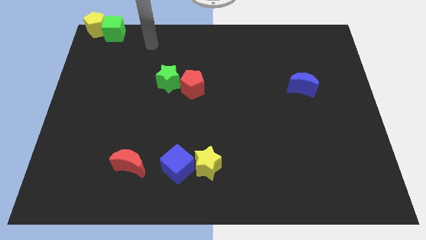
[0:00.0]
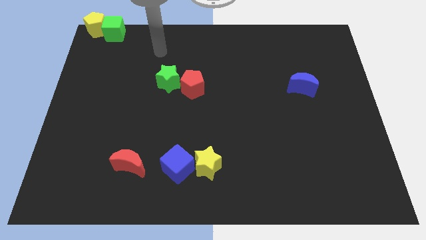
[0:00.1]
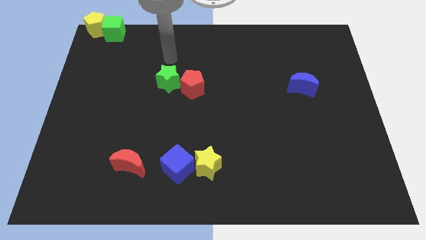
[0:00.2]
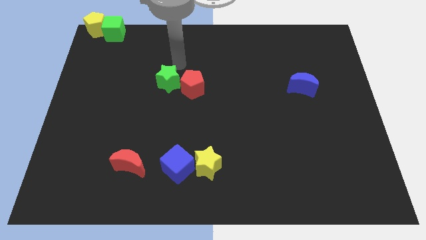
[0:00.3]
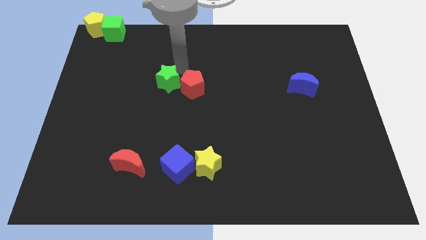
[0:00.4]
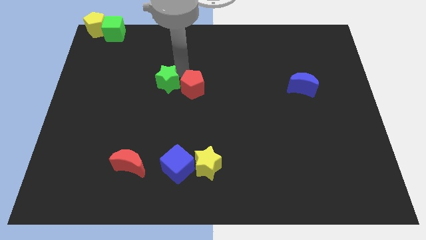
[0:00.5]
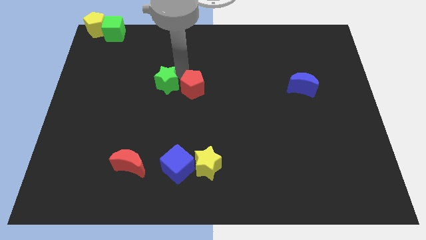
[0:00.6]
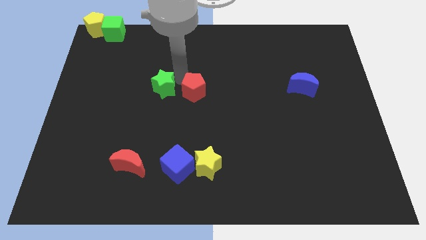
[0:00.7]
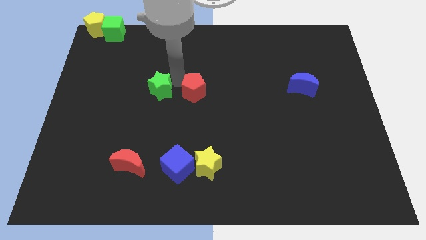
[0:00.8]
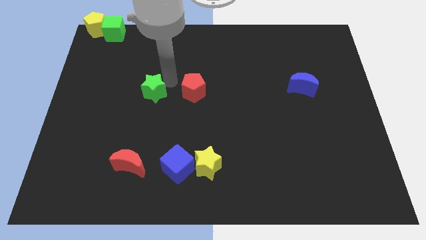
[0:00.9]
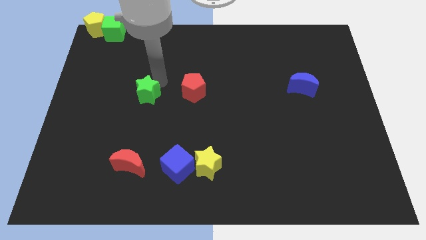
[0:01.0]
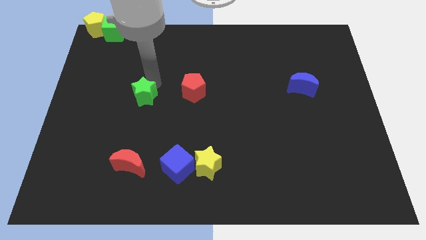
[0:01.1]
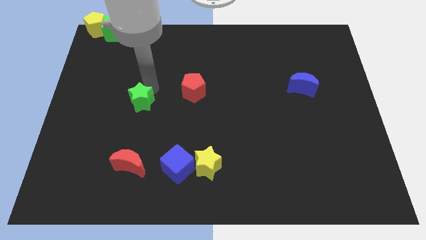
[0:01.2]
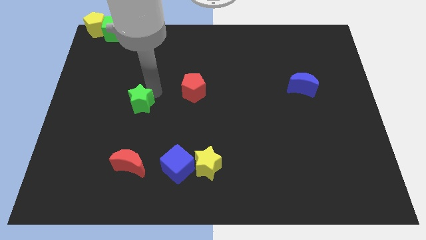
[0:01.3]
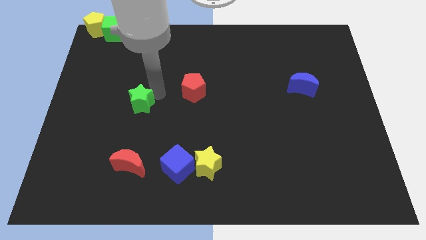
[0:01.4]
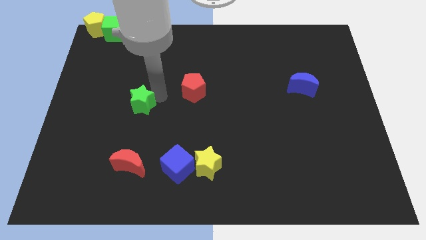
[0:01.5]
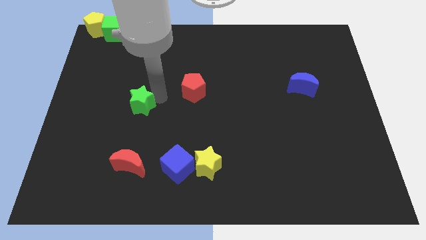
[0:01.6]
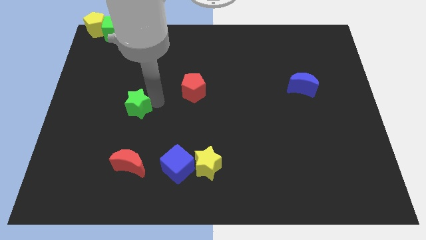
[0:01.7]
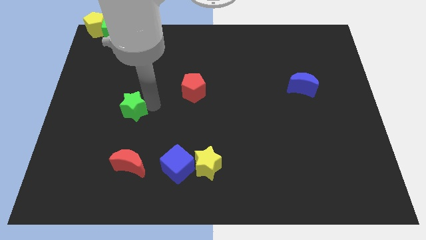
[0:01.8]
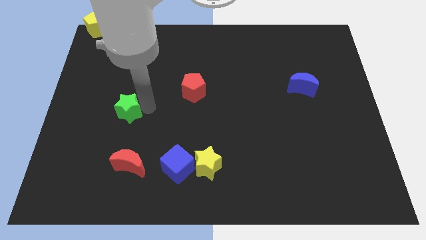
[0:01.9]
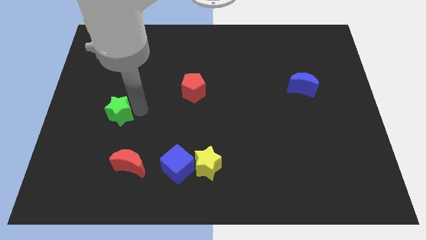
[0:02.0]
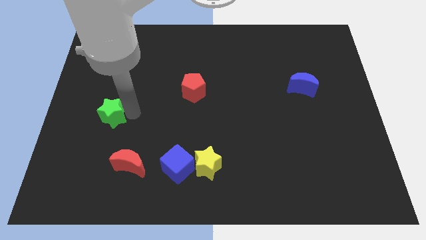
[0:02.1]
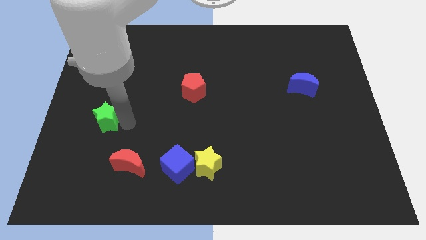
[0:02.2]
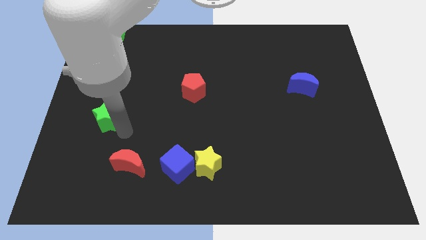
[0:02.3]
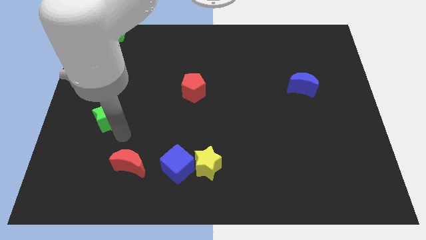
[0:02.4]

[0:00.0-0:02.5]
separate the green star from red pentagon

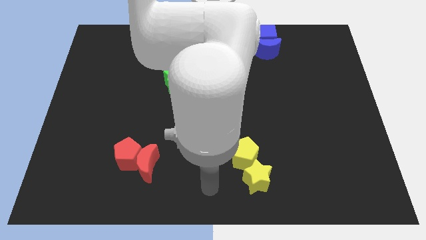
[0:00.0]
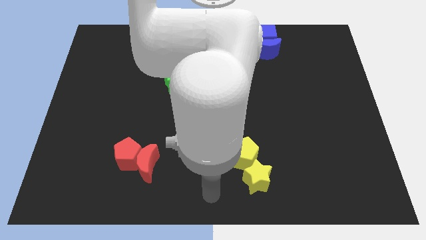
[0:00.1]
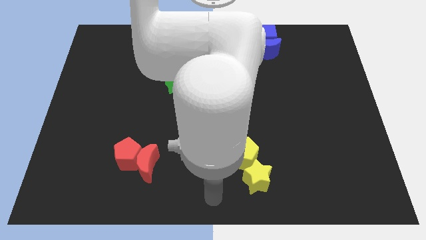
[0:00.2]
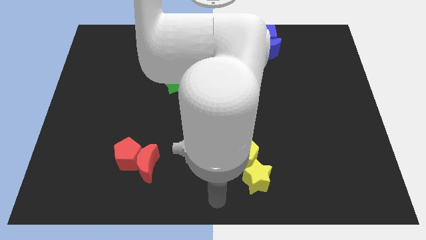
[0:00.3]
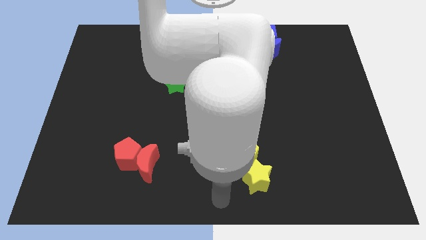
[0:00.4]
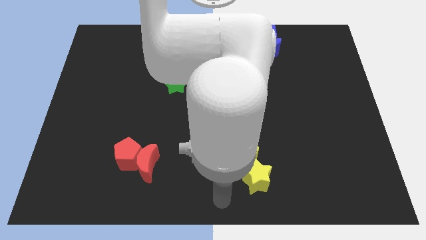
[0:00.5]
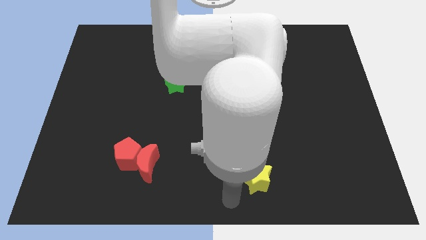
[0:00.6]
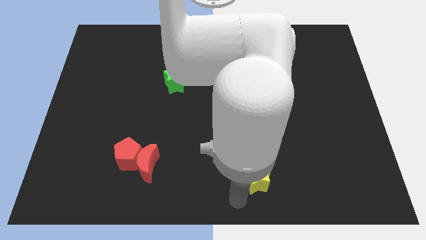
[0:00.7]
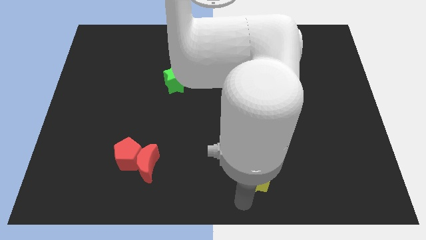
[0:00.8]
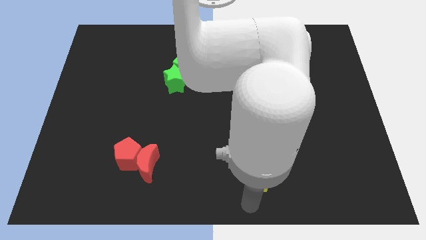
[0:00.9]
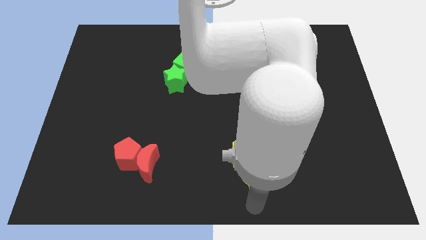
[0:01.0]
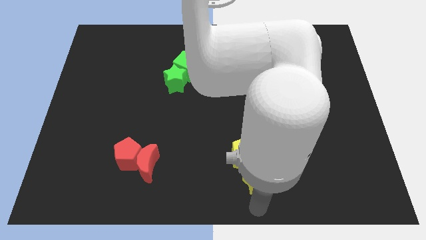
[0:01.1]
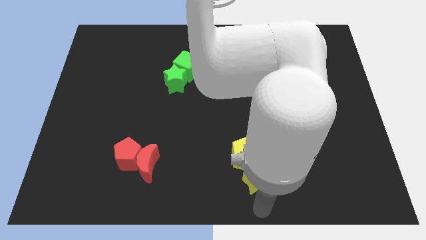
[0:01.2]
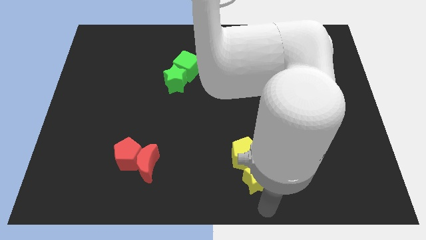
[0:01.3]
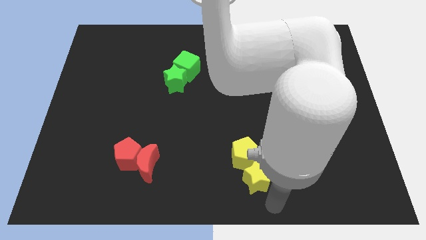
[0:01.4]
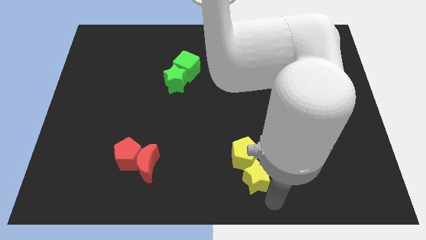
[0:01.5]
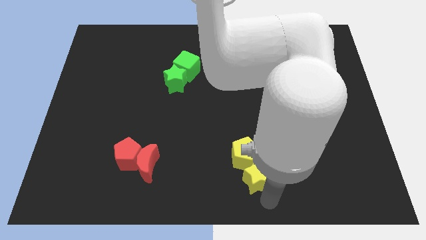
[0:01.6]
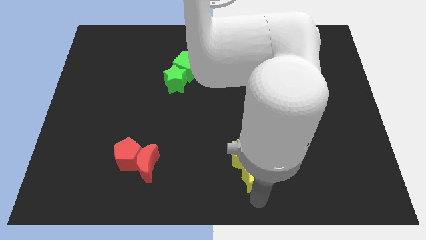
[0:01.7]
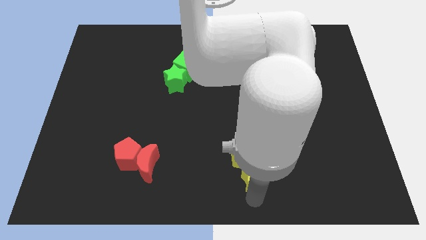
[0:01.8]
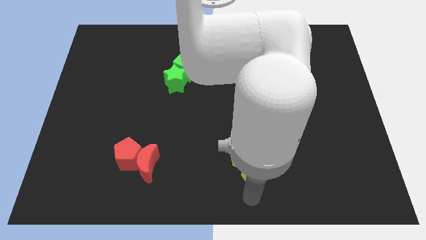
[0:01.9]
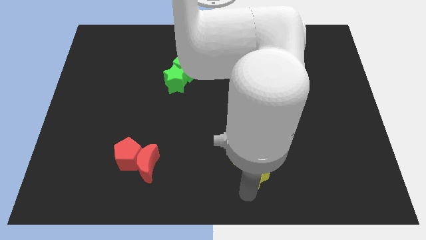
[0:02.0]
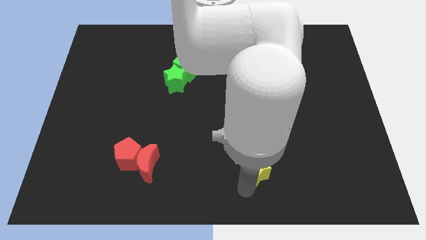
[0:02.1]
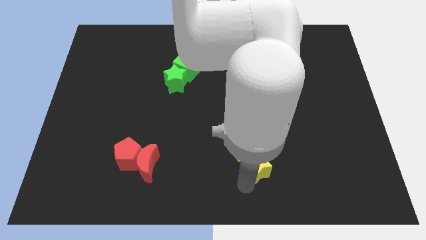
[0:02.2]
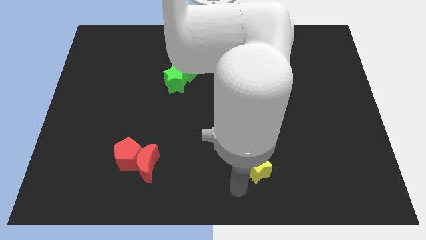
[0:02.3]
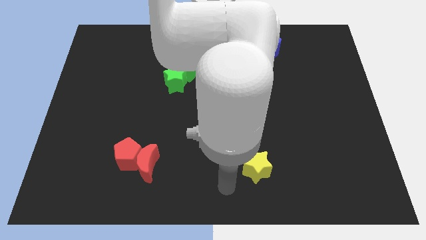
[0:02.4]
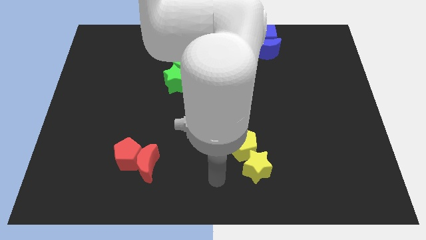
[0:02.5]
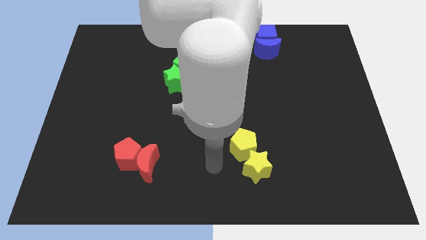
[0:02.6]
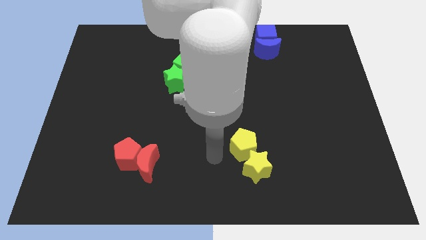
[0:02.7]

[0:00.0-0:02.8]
slightly push the yellow blocks towards the top of the board

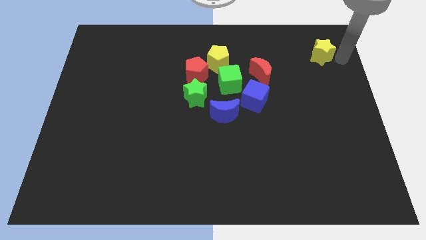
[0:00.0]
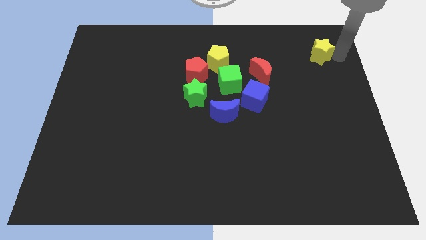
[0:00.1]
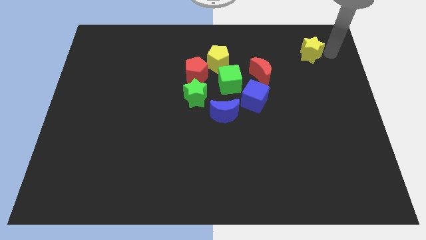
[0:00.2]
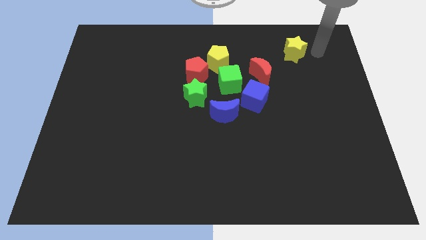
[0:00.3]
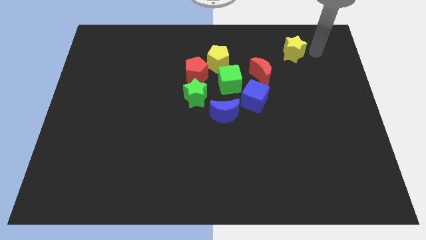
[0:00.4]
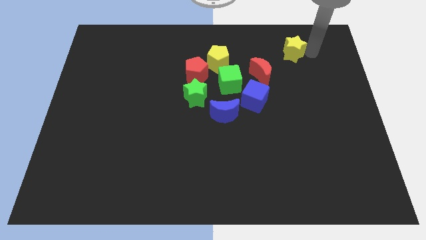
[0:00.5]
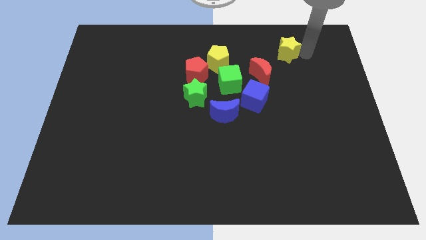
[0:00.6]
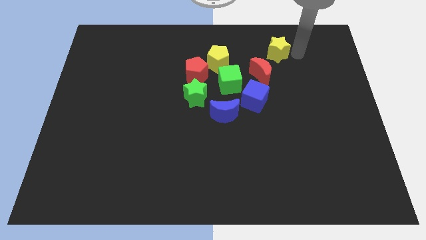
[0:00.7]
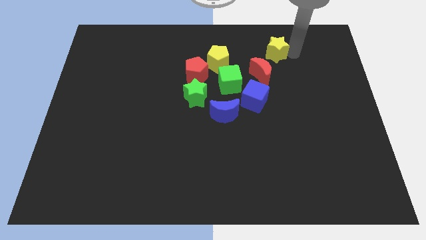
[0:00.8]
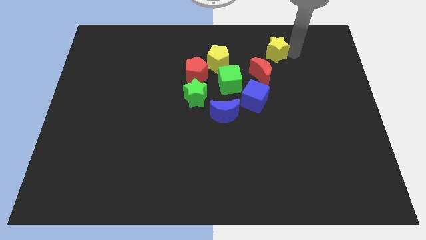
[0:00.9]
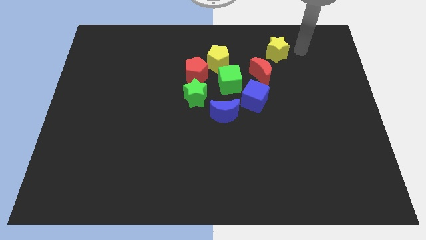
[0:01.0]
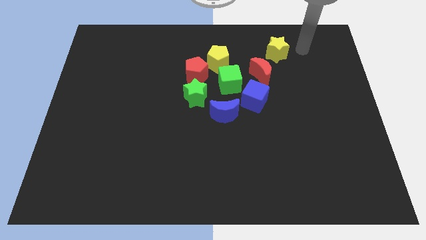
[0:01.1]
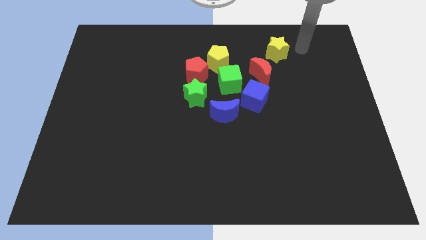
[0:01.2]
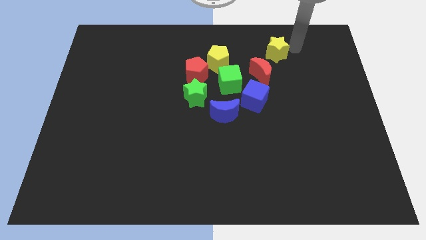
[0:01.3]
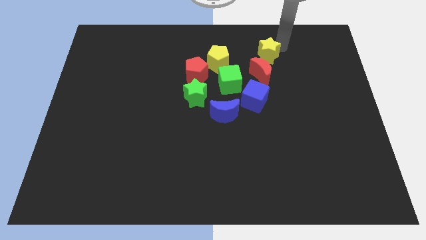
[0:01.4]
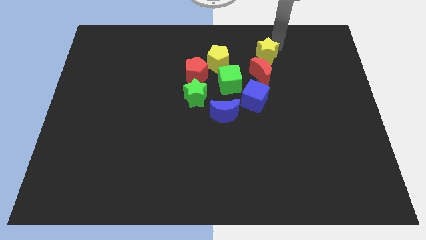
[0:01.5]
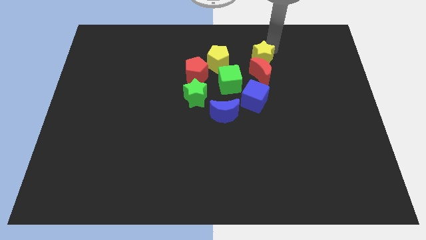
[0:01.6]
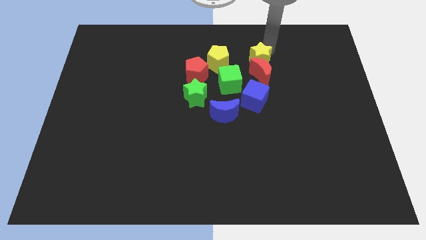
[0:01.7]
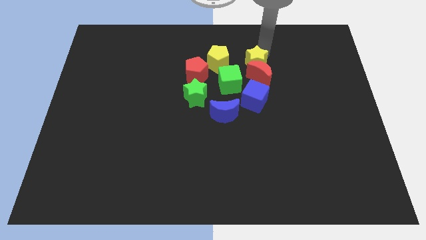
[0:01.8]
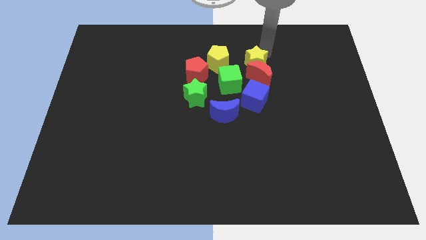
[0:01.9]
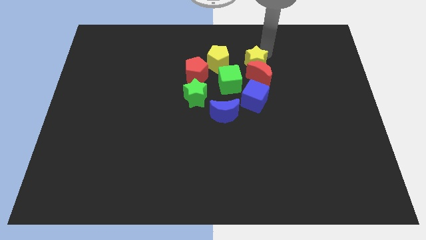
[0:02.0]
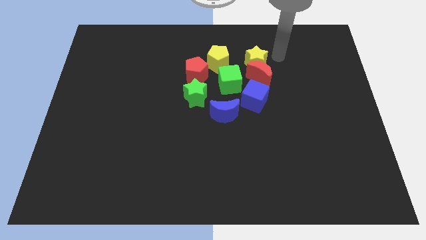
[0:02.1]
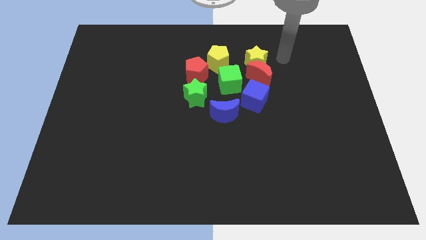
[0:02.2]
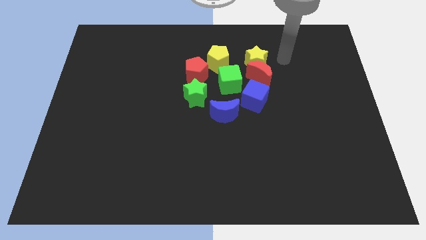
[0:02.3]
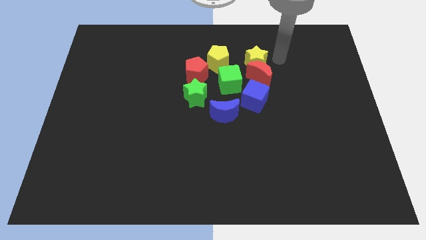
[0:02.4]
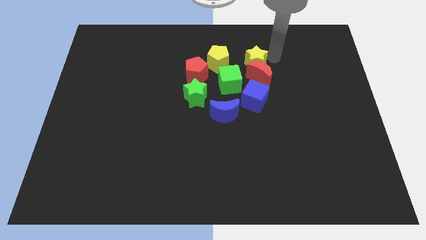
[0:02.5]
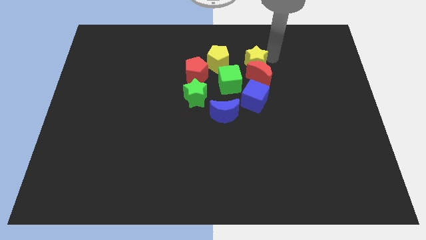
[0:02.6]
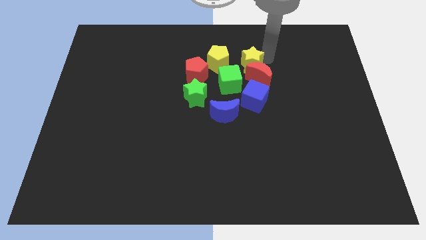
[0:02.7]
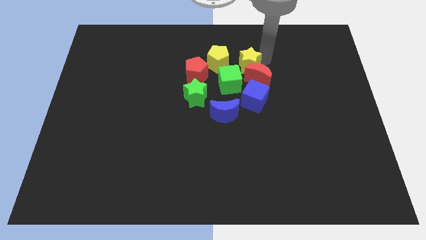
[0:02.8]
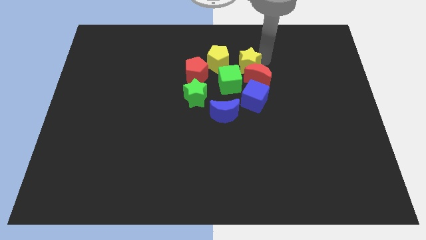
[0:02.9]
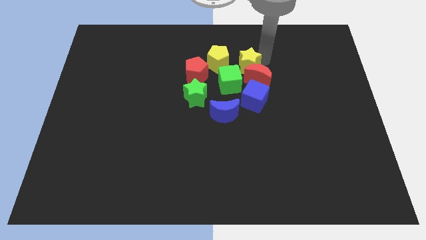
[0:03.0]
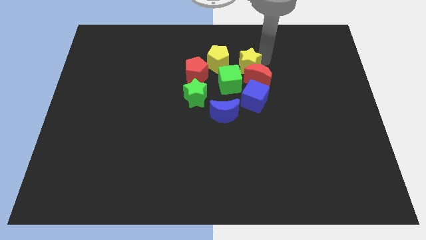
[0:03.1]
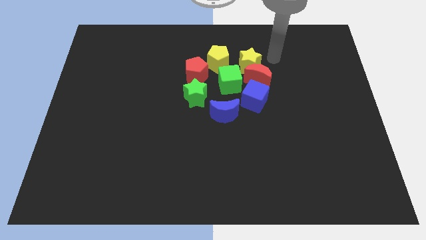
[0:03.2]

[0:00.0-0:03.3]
push the yellow star above the red crescent

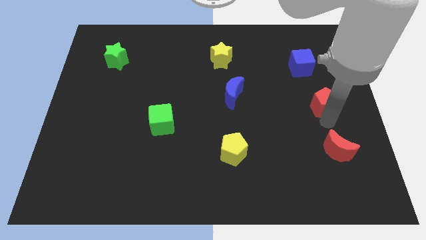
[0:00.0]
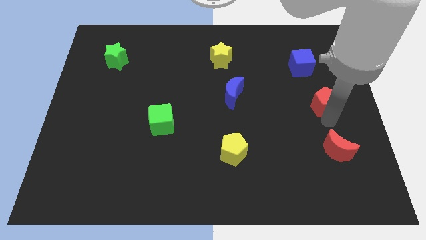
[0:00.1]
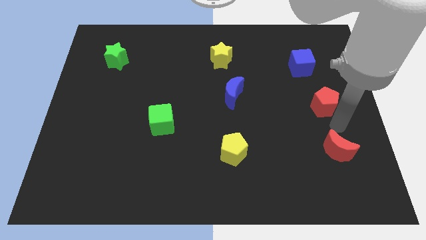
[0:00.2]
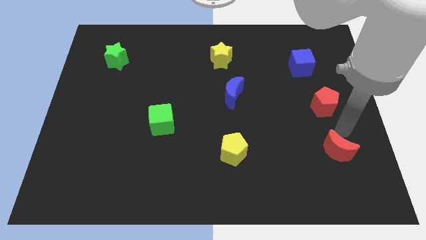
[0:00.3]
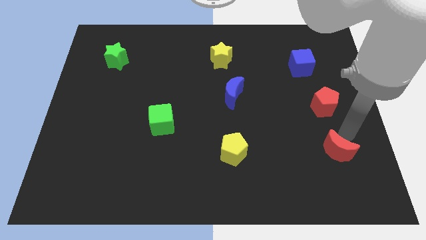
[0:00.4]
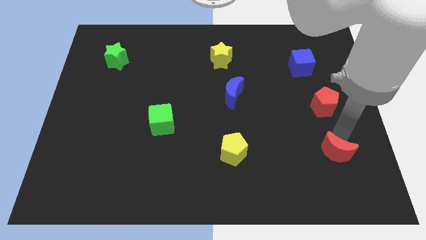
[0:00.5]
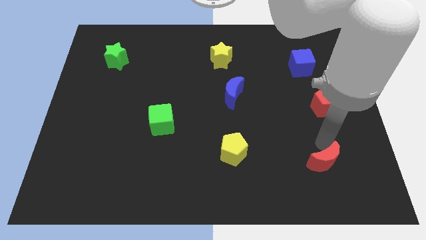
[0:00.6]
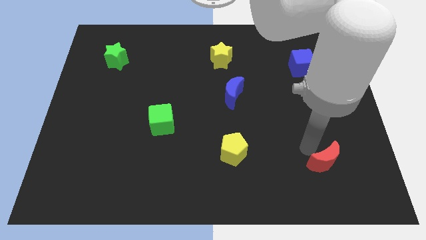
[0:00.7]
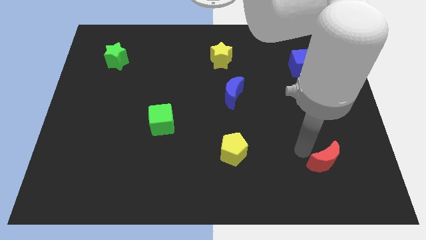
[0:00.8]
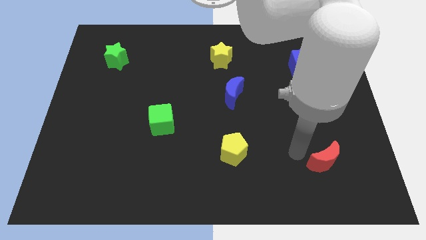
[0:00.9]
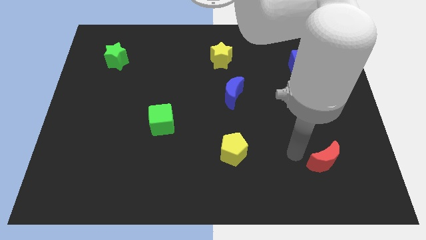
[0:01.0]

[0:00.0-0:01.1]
move the red crescent slightly to the bottom
